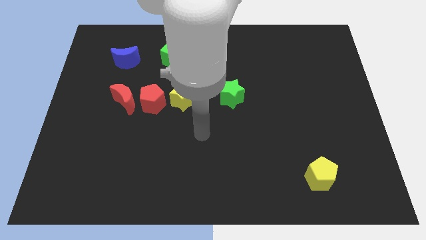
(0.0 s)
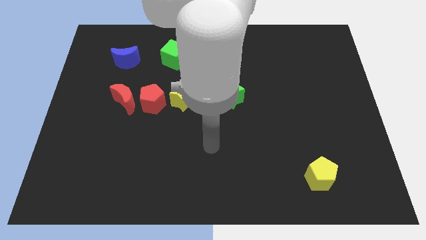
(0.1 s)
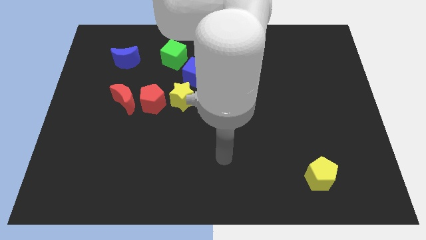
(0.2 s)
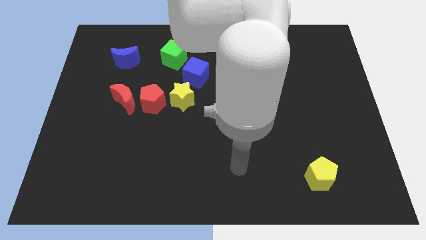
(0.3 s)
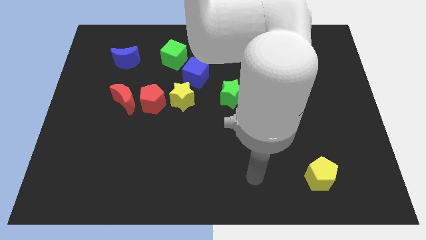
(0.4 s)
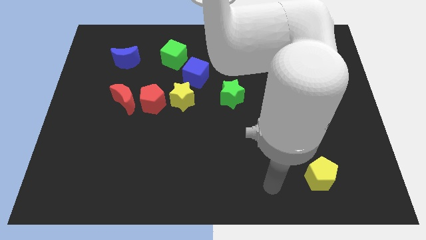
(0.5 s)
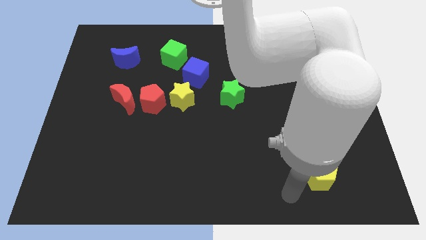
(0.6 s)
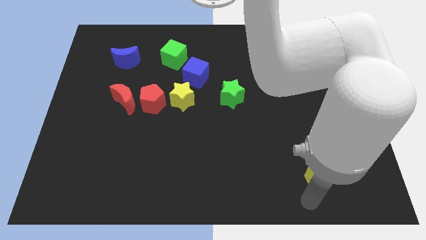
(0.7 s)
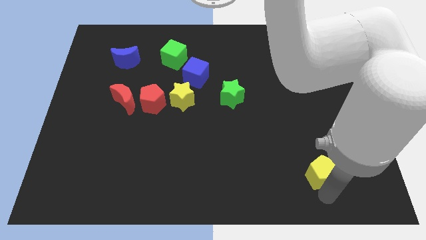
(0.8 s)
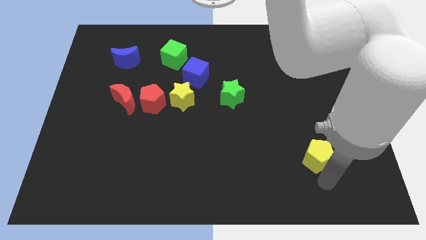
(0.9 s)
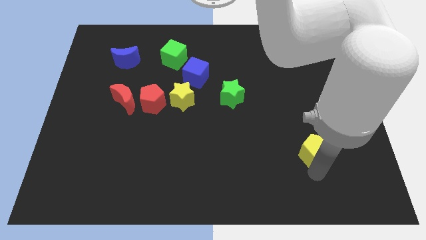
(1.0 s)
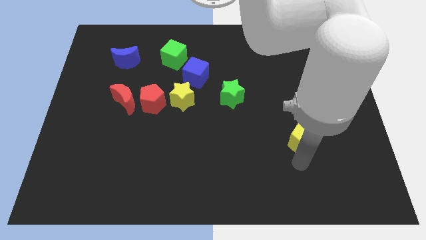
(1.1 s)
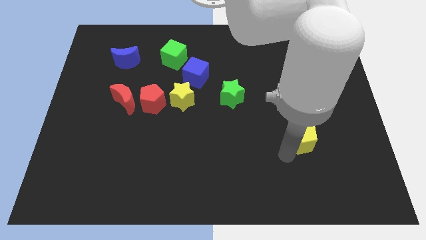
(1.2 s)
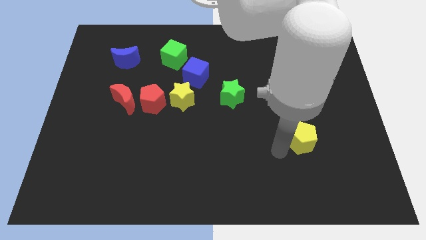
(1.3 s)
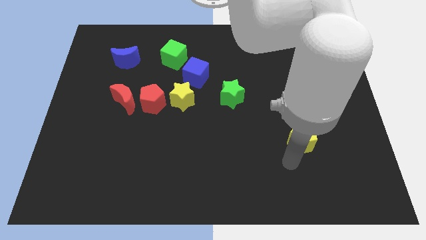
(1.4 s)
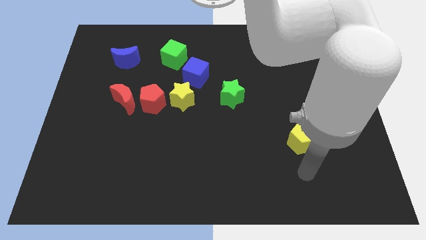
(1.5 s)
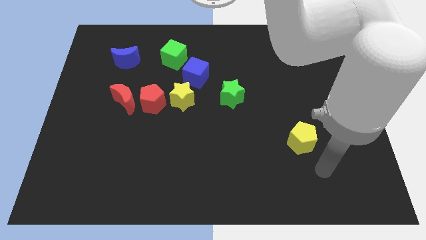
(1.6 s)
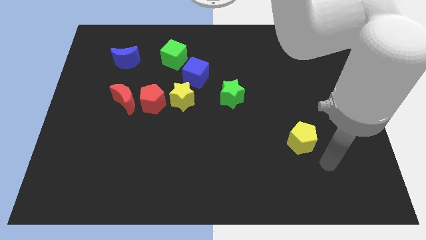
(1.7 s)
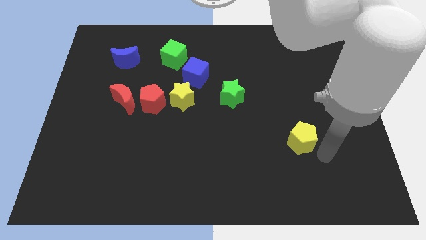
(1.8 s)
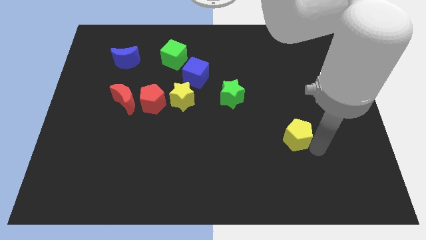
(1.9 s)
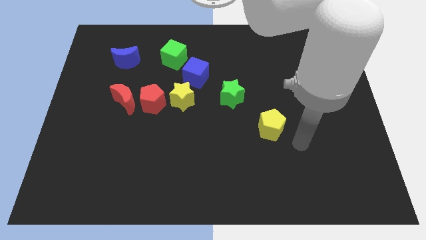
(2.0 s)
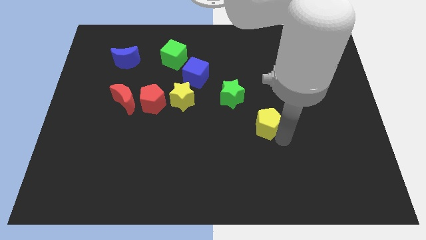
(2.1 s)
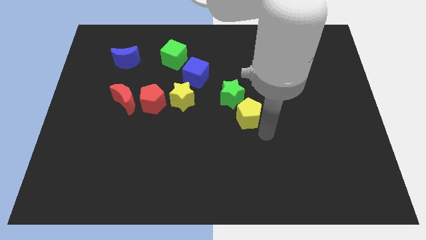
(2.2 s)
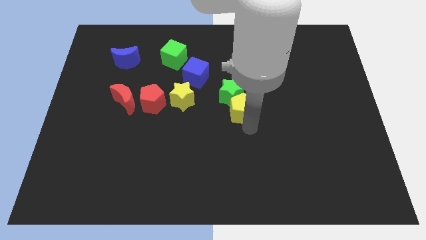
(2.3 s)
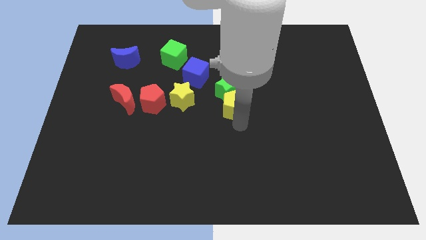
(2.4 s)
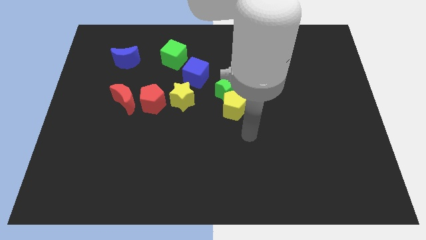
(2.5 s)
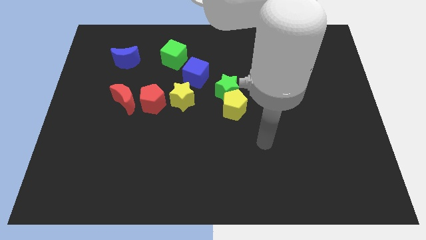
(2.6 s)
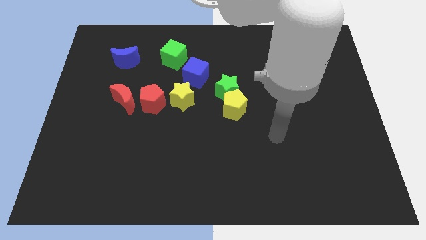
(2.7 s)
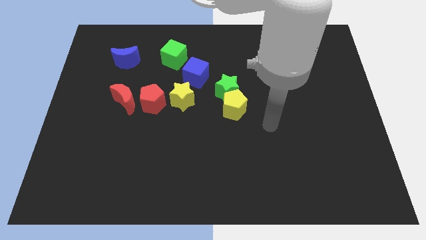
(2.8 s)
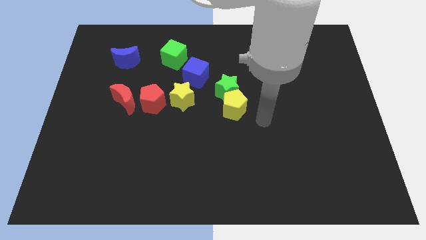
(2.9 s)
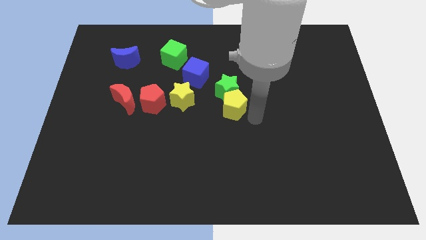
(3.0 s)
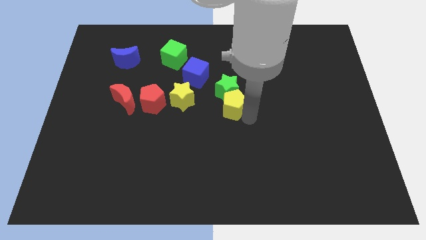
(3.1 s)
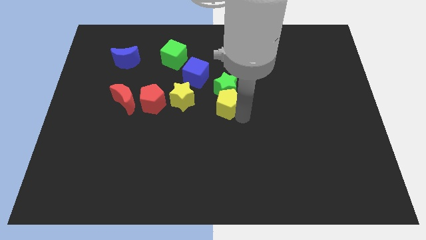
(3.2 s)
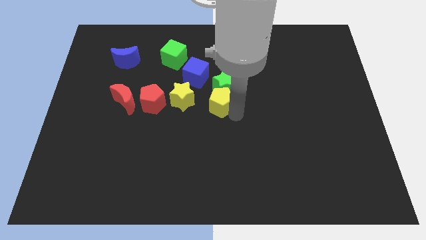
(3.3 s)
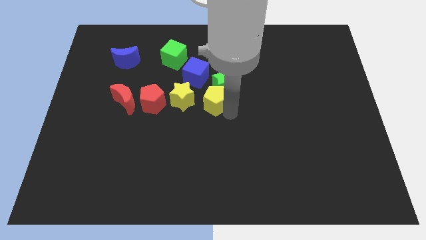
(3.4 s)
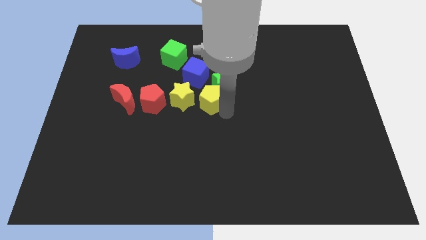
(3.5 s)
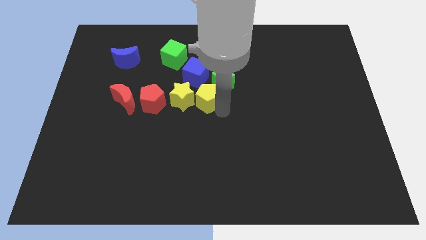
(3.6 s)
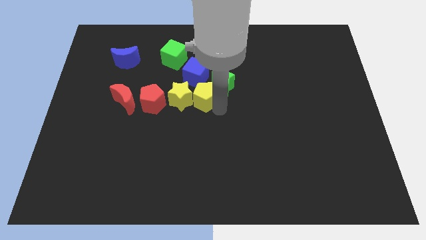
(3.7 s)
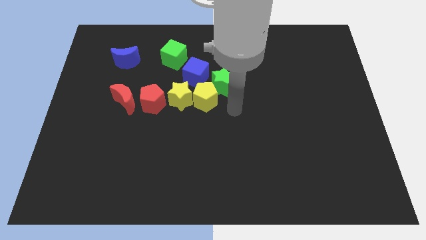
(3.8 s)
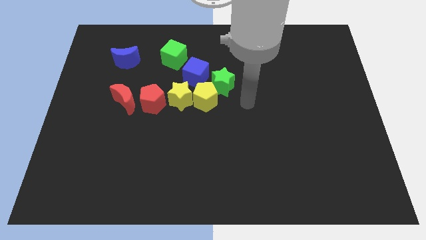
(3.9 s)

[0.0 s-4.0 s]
push the yellow pentagon to the right of the yellow star

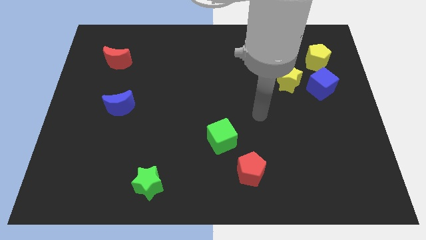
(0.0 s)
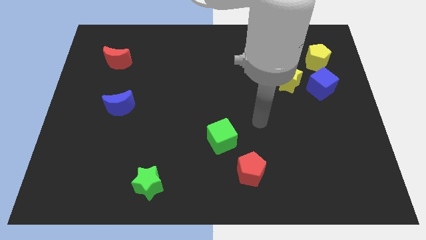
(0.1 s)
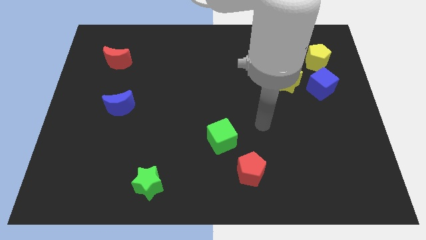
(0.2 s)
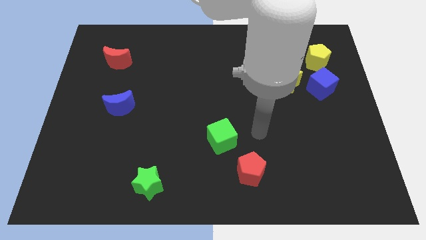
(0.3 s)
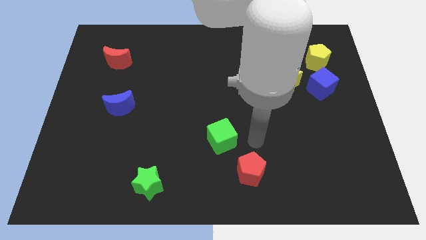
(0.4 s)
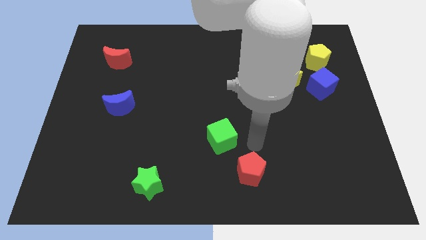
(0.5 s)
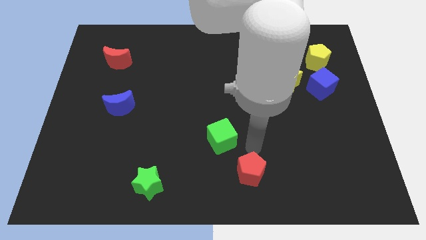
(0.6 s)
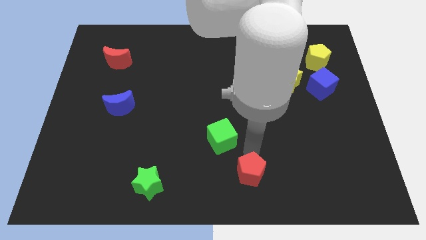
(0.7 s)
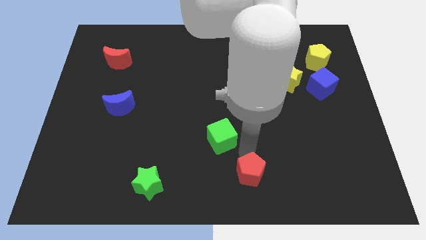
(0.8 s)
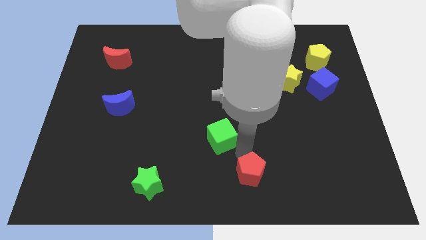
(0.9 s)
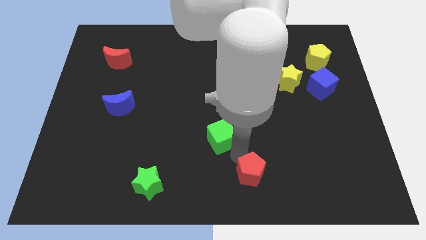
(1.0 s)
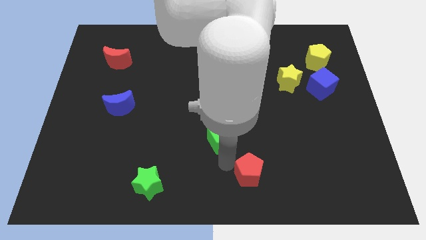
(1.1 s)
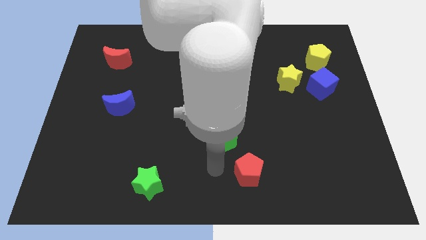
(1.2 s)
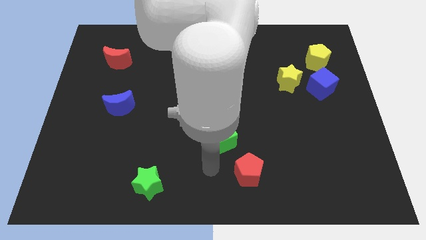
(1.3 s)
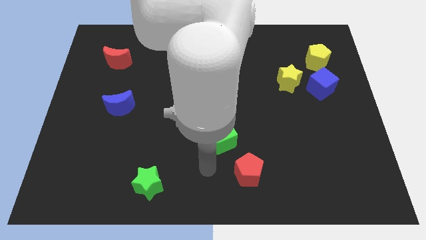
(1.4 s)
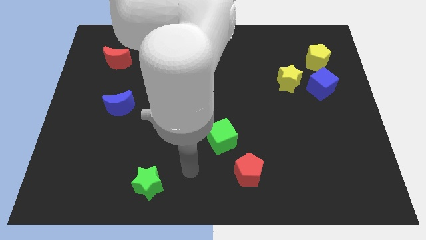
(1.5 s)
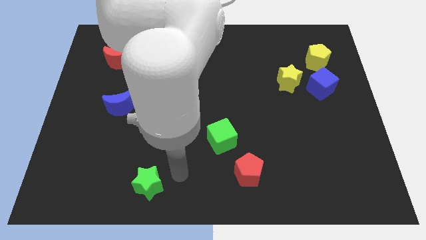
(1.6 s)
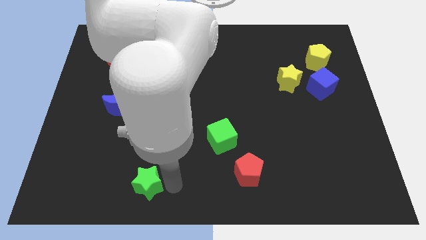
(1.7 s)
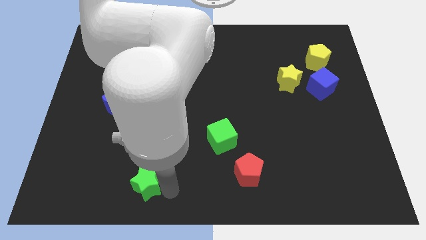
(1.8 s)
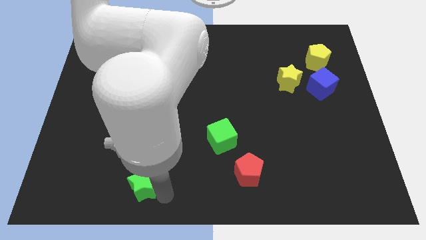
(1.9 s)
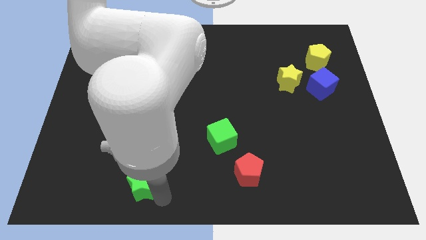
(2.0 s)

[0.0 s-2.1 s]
move your arm to the right side of the green star

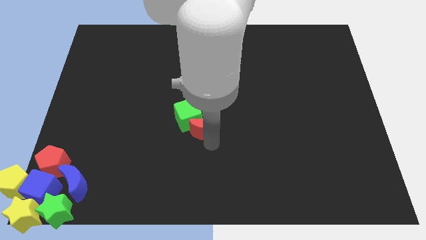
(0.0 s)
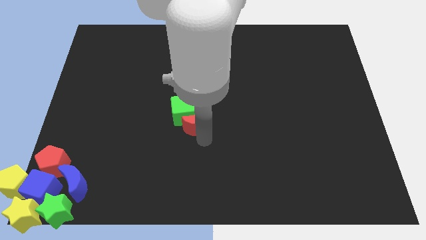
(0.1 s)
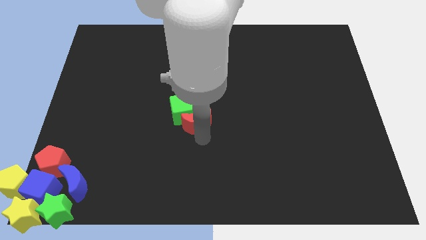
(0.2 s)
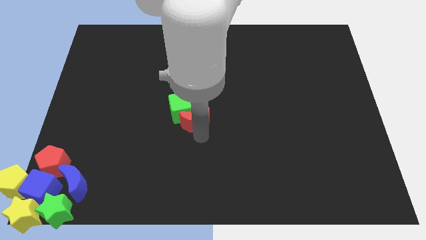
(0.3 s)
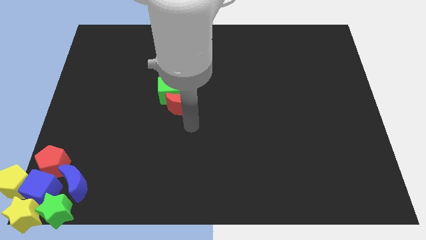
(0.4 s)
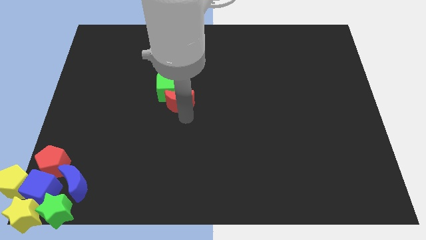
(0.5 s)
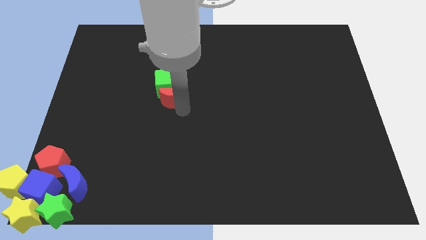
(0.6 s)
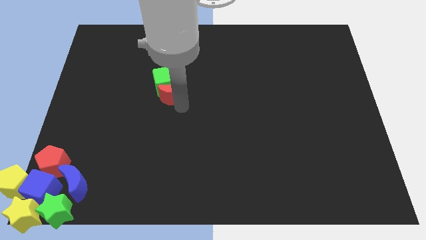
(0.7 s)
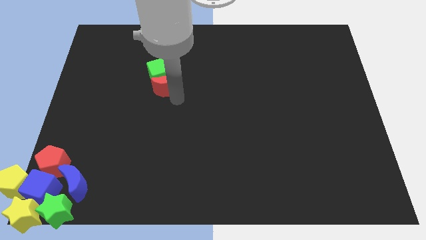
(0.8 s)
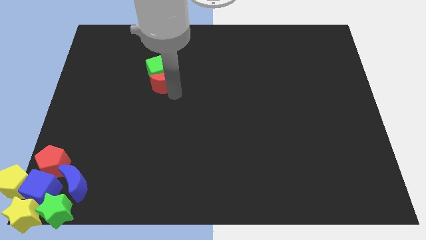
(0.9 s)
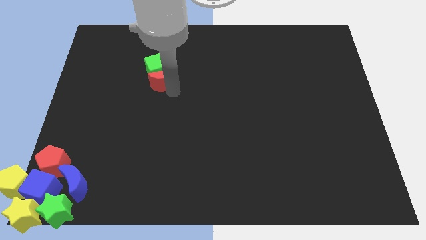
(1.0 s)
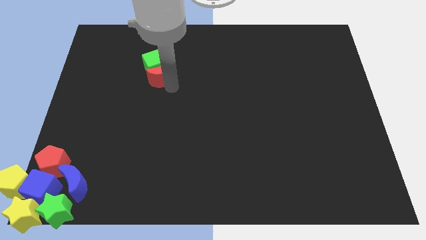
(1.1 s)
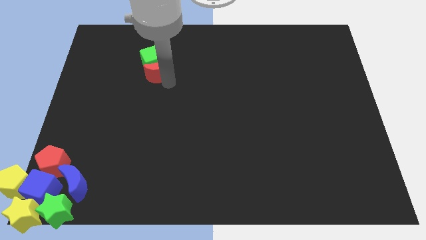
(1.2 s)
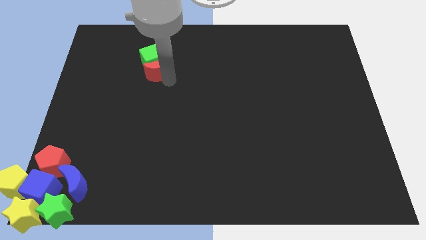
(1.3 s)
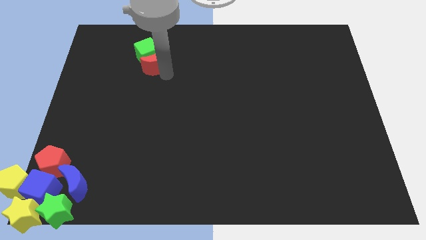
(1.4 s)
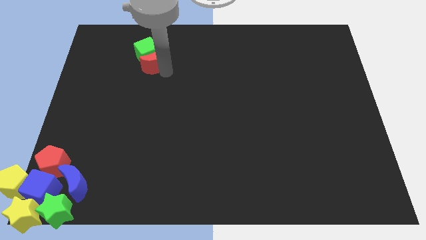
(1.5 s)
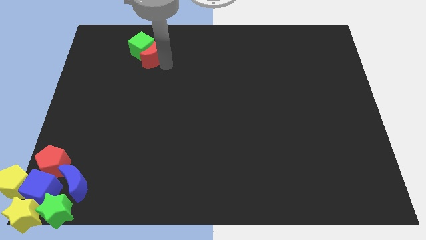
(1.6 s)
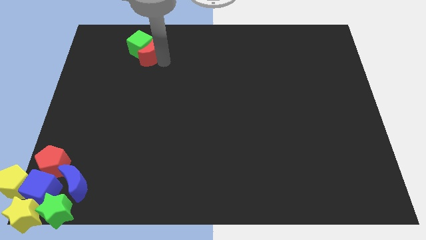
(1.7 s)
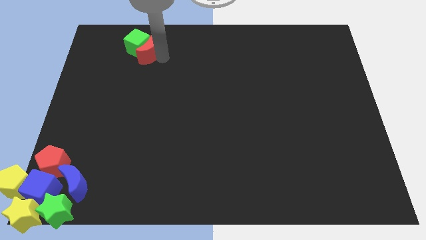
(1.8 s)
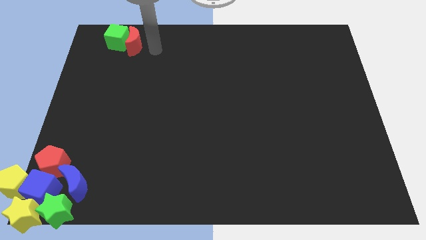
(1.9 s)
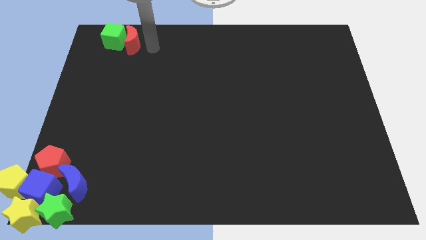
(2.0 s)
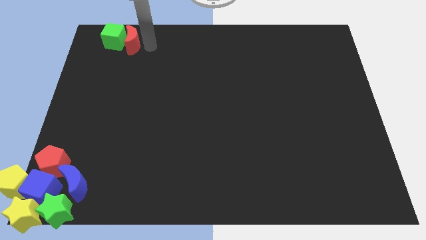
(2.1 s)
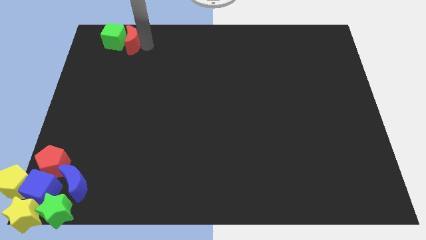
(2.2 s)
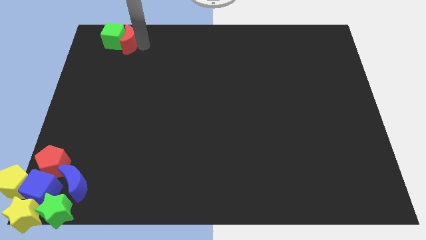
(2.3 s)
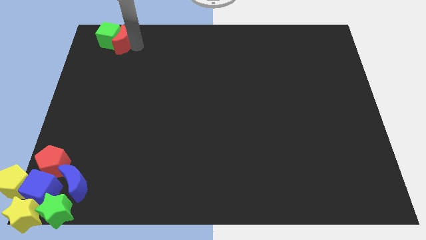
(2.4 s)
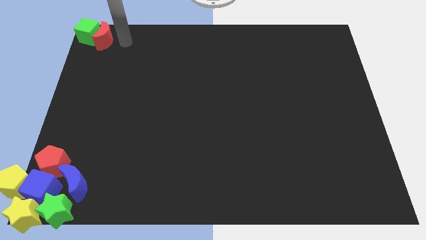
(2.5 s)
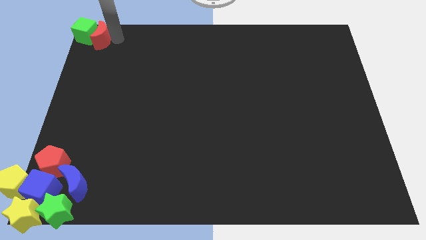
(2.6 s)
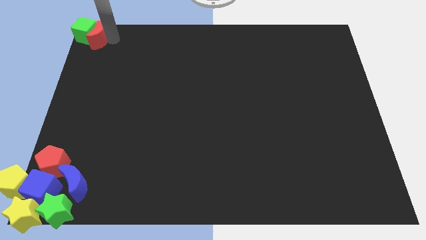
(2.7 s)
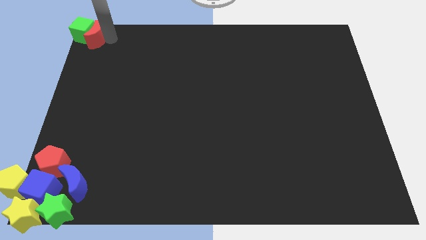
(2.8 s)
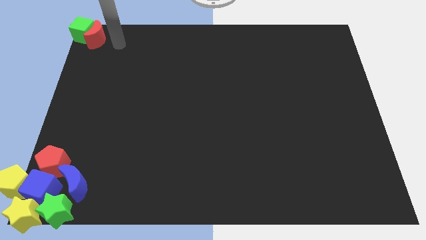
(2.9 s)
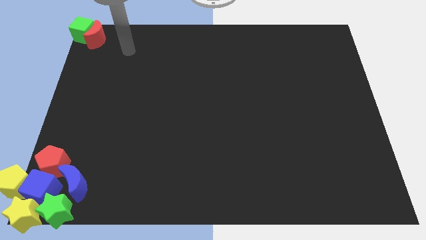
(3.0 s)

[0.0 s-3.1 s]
slide the red moon to the top left corner of the board along with the green cube
